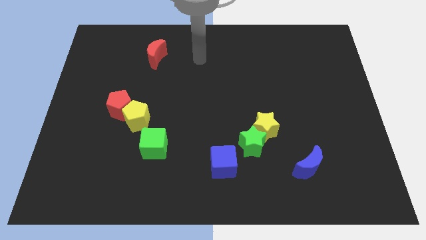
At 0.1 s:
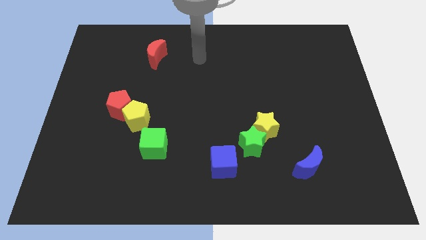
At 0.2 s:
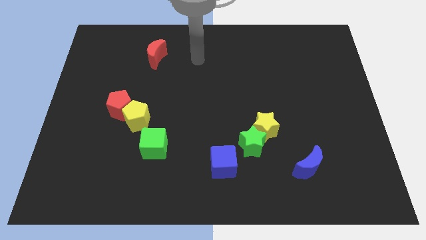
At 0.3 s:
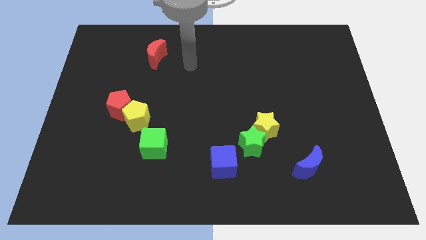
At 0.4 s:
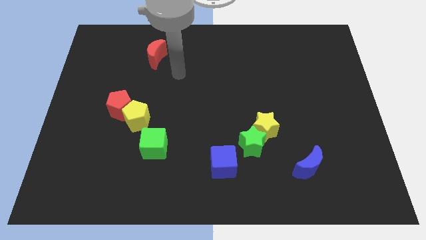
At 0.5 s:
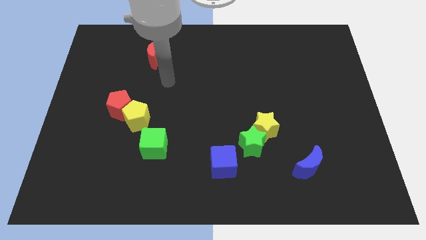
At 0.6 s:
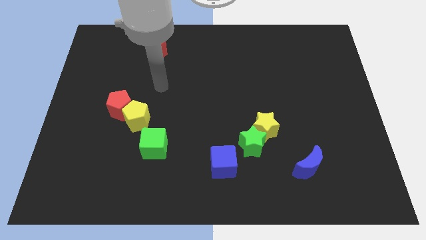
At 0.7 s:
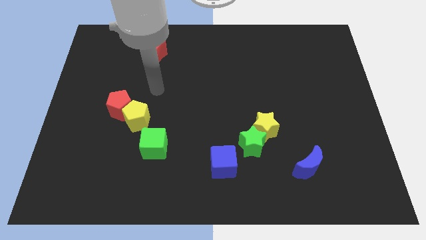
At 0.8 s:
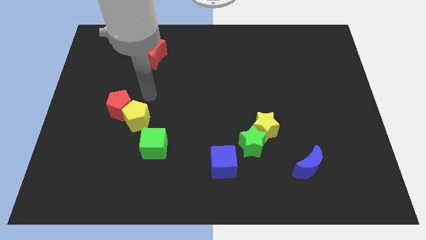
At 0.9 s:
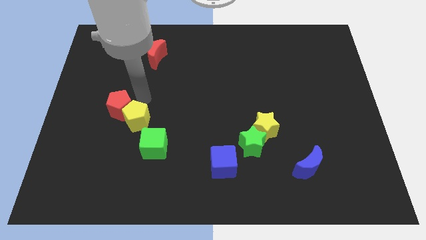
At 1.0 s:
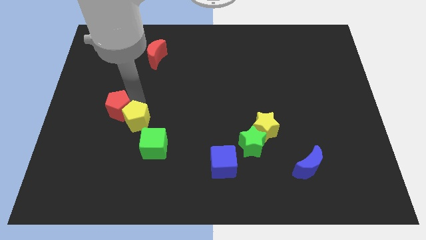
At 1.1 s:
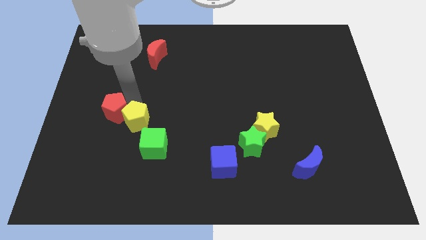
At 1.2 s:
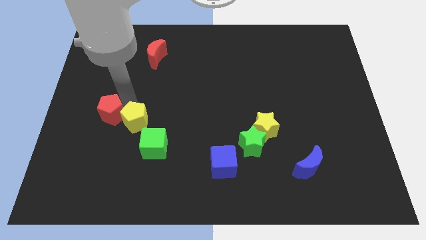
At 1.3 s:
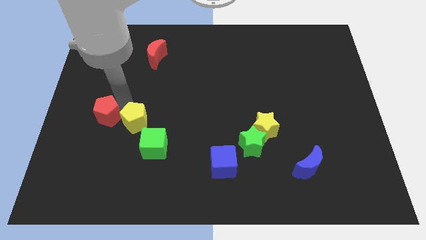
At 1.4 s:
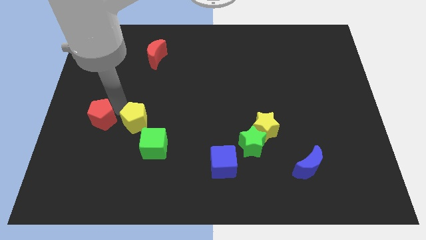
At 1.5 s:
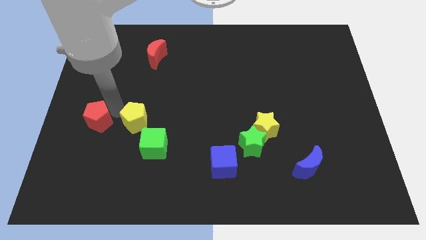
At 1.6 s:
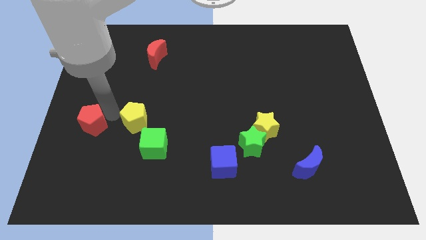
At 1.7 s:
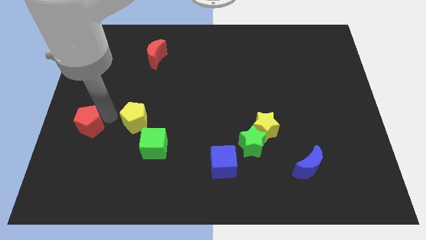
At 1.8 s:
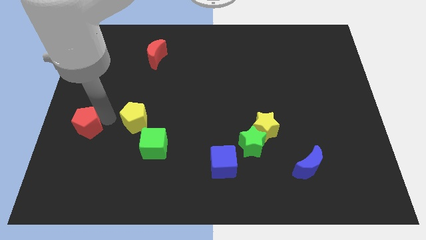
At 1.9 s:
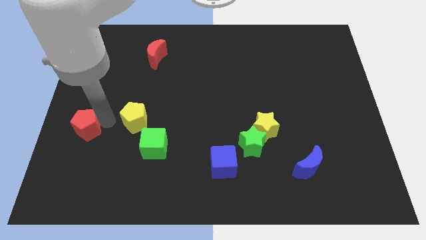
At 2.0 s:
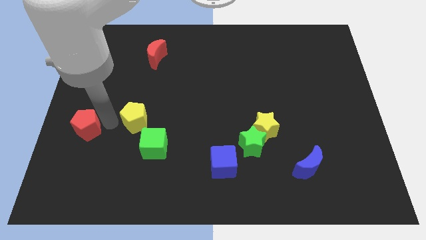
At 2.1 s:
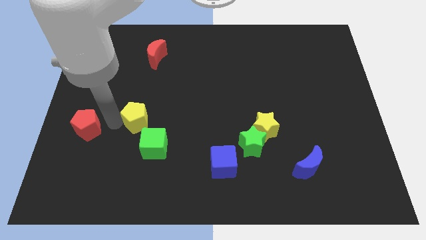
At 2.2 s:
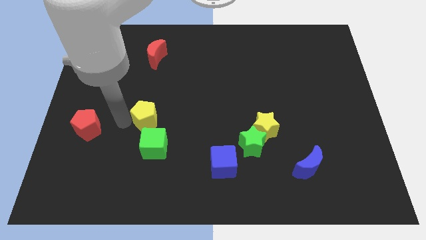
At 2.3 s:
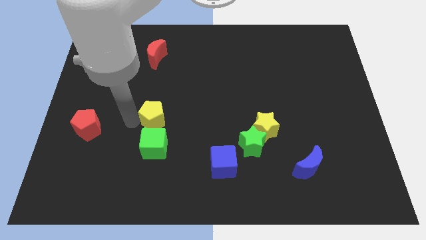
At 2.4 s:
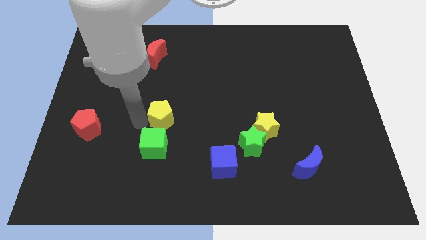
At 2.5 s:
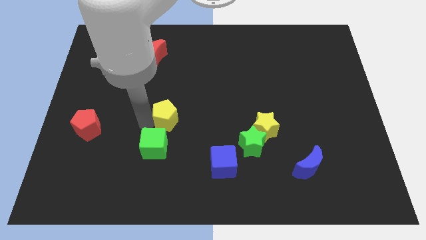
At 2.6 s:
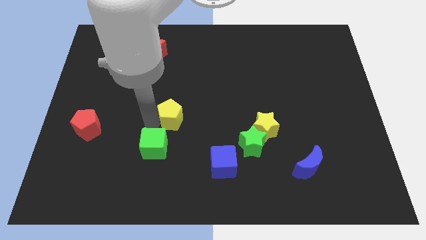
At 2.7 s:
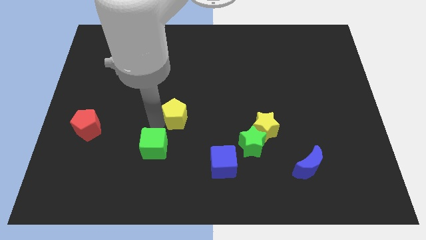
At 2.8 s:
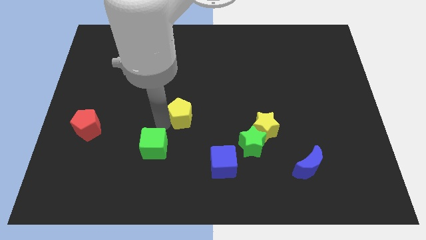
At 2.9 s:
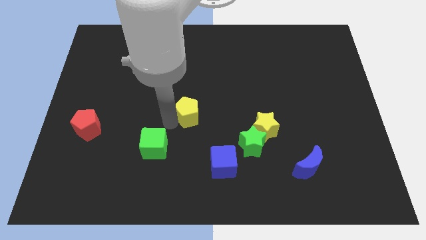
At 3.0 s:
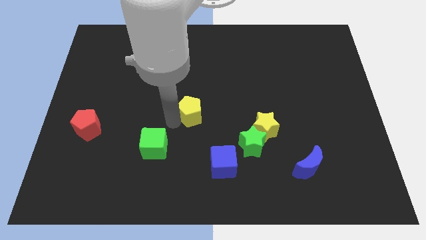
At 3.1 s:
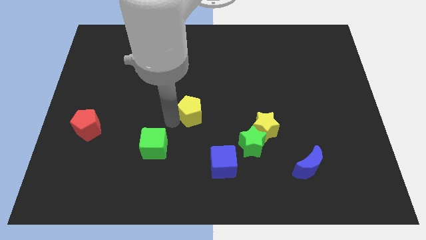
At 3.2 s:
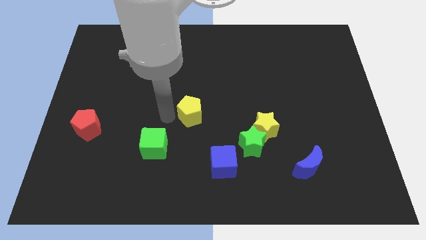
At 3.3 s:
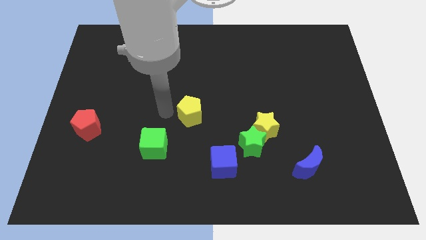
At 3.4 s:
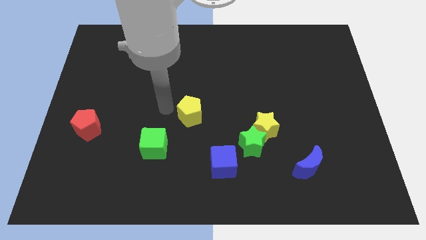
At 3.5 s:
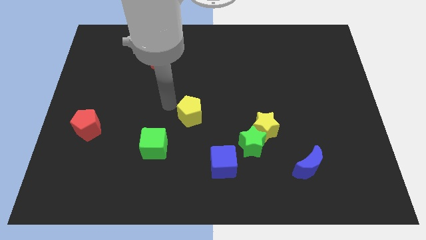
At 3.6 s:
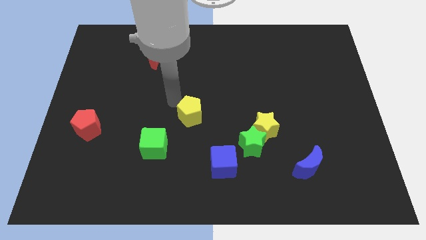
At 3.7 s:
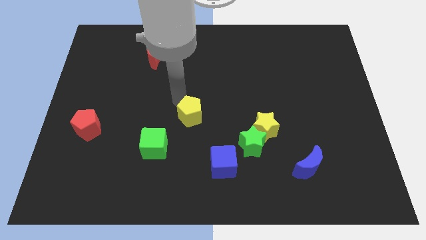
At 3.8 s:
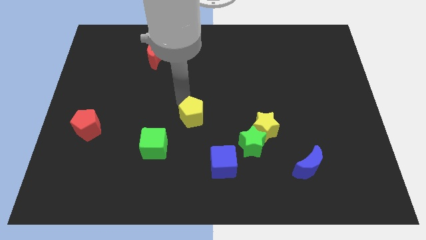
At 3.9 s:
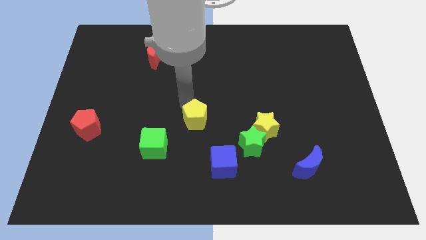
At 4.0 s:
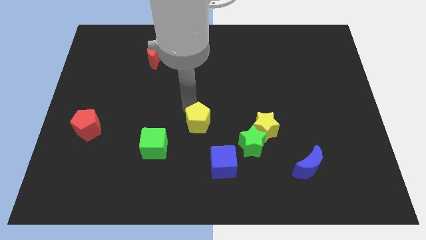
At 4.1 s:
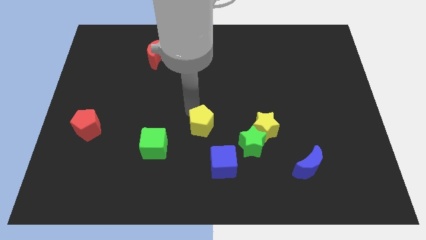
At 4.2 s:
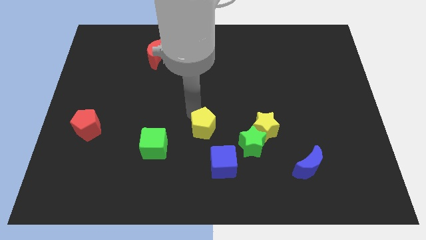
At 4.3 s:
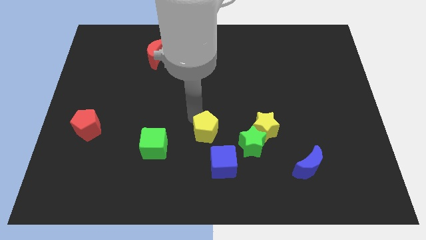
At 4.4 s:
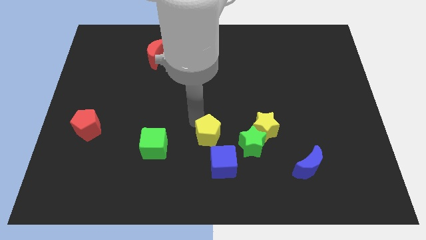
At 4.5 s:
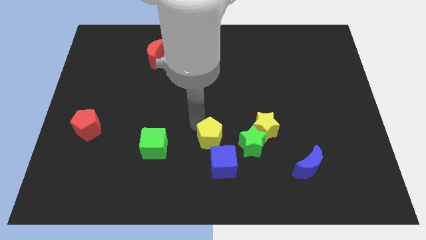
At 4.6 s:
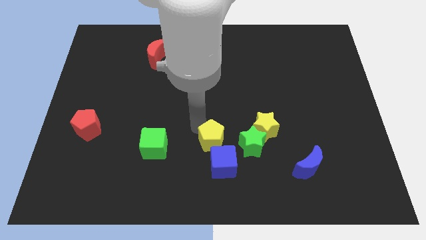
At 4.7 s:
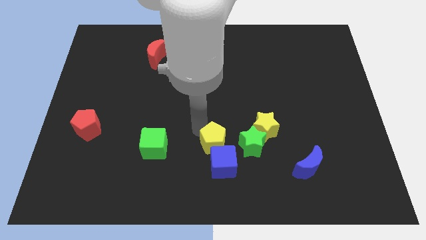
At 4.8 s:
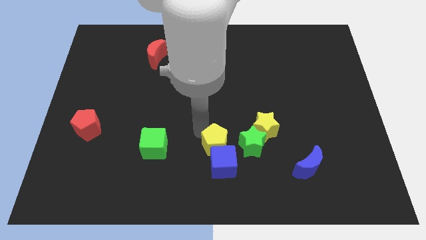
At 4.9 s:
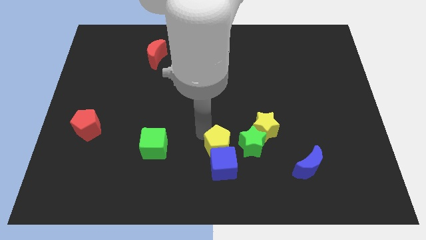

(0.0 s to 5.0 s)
push the yellow pentagon close to the blue cube

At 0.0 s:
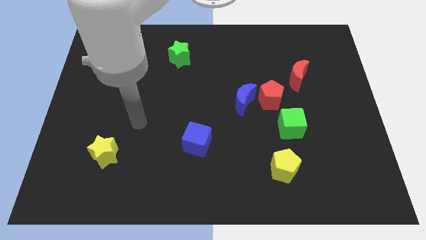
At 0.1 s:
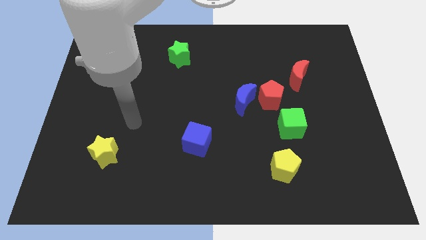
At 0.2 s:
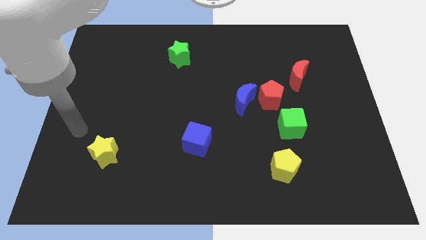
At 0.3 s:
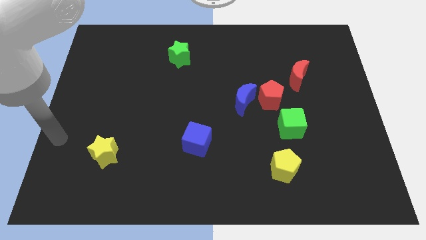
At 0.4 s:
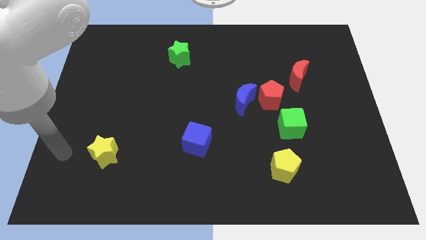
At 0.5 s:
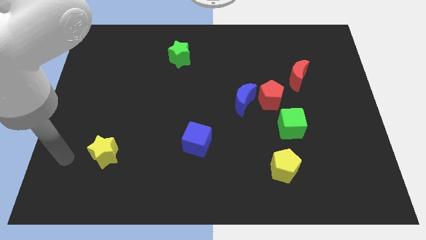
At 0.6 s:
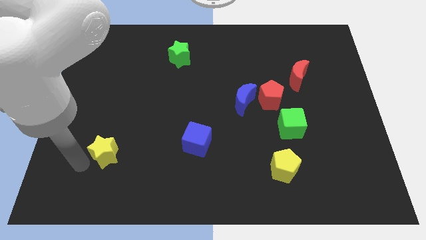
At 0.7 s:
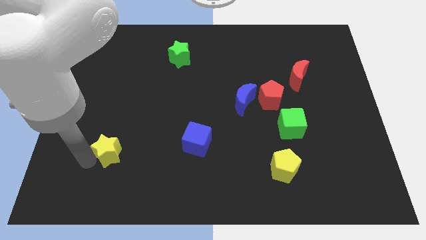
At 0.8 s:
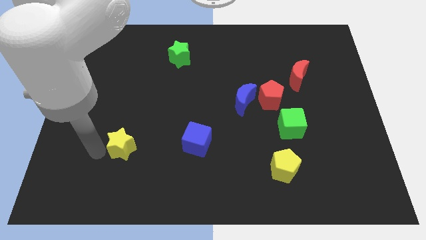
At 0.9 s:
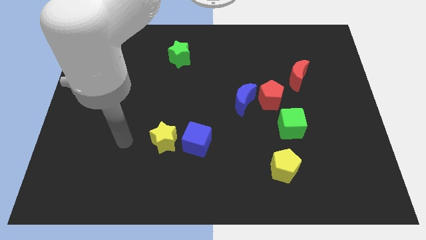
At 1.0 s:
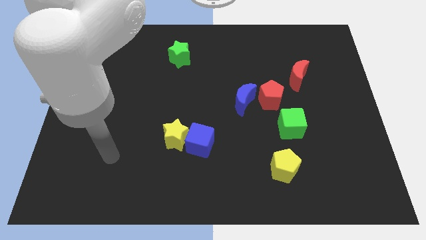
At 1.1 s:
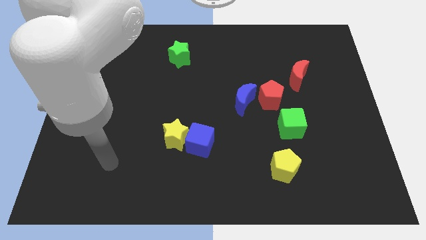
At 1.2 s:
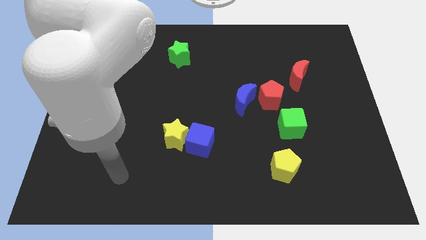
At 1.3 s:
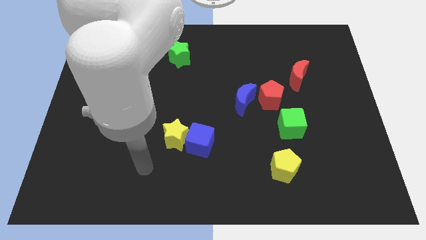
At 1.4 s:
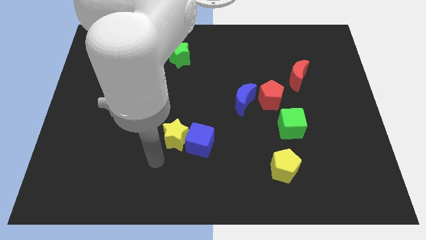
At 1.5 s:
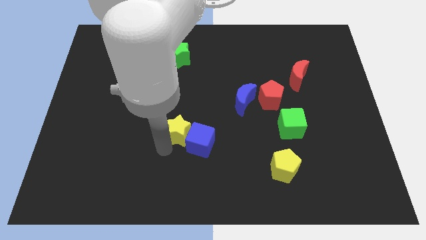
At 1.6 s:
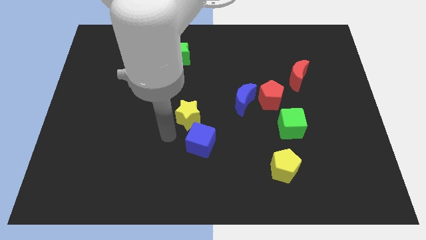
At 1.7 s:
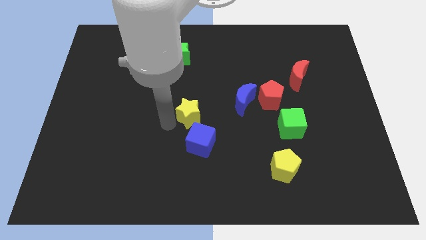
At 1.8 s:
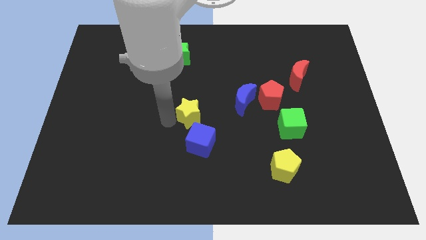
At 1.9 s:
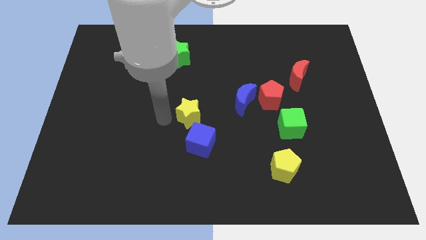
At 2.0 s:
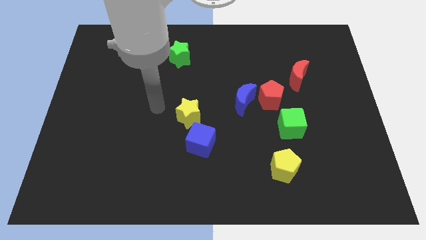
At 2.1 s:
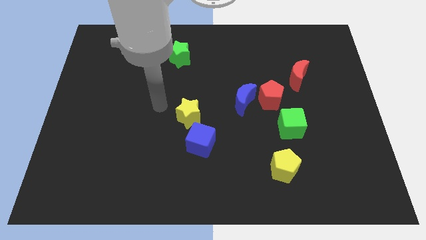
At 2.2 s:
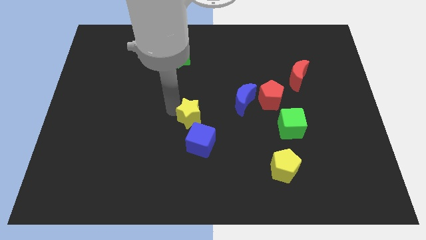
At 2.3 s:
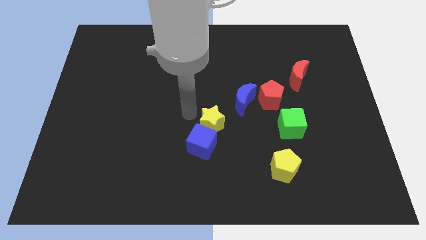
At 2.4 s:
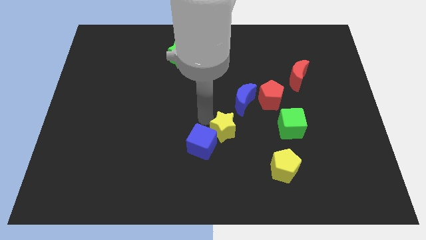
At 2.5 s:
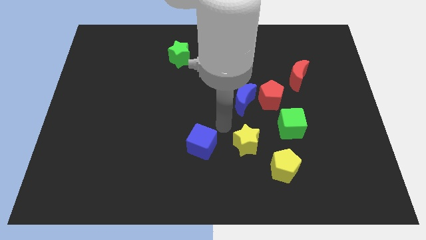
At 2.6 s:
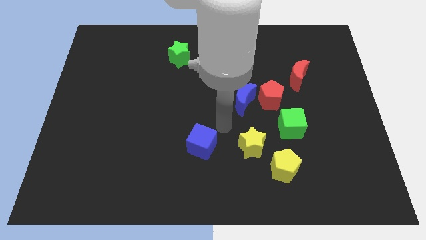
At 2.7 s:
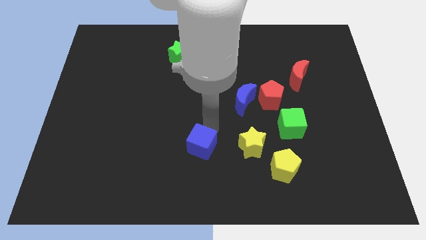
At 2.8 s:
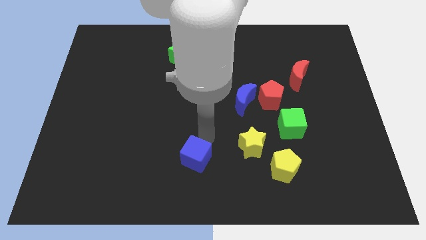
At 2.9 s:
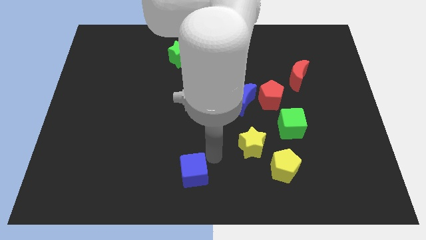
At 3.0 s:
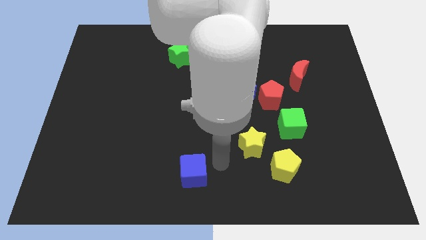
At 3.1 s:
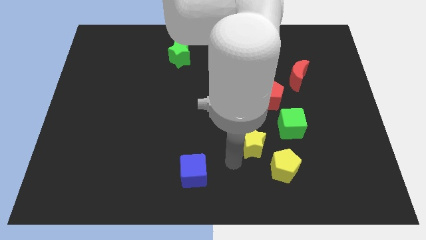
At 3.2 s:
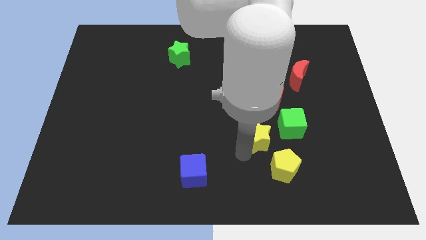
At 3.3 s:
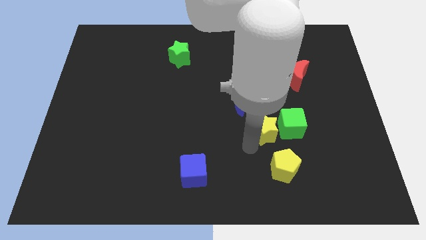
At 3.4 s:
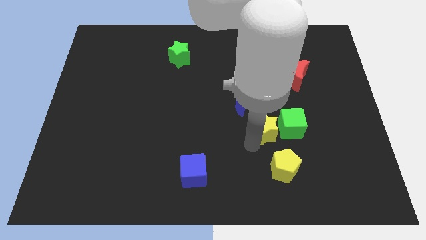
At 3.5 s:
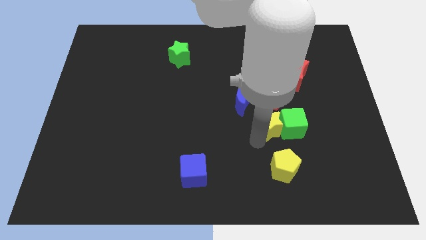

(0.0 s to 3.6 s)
slide the yellow star next to the green cube

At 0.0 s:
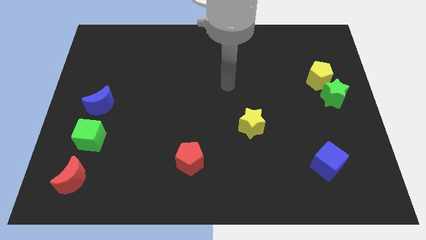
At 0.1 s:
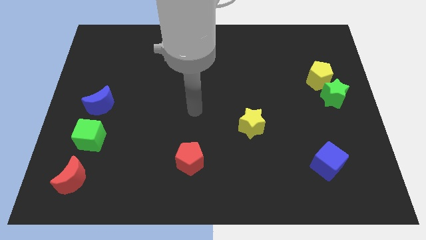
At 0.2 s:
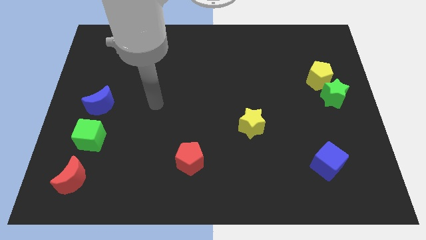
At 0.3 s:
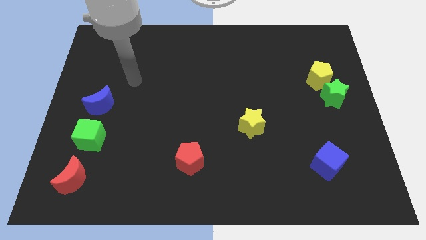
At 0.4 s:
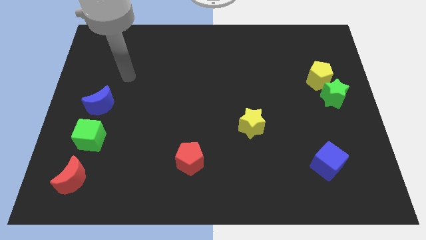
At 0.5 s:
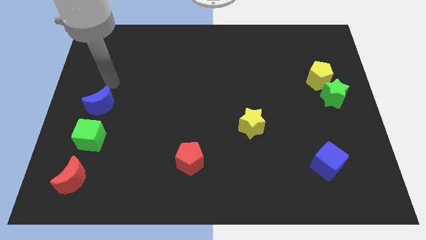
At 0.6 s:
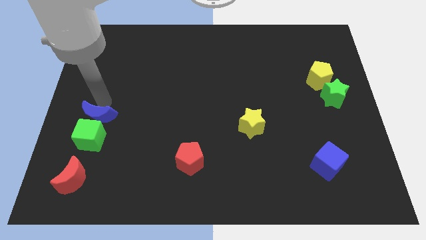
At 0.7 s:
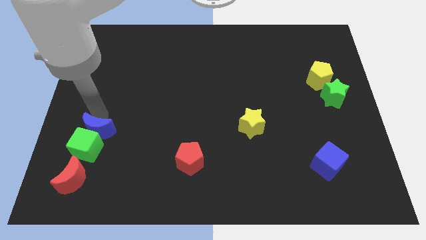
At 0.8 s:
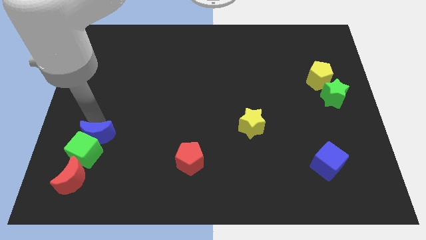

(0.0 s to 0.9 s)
move the blue moon next to the green cube
